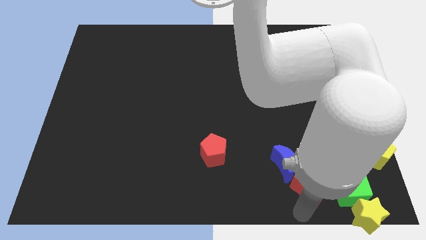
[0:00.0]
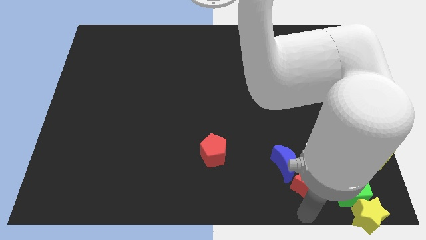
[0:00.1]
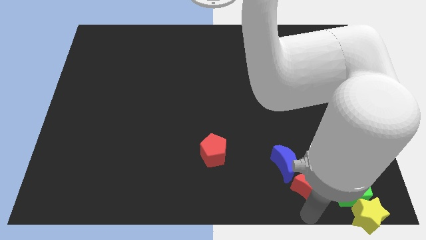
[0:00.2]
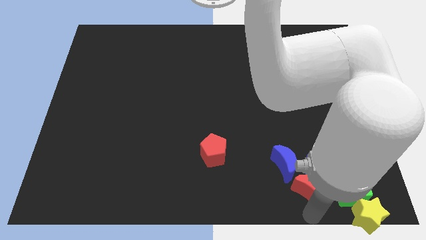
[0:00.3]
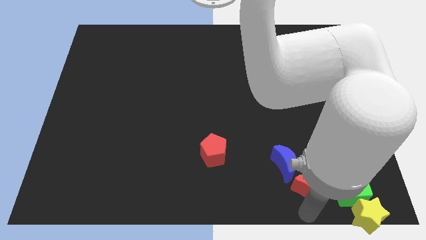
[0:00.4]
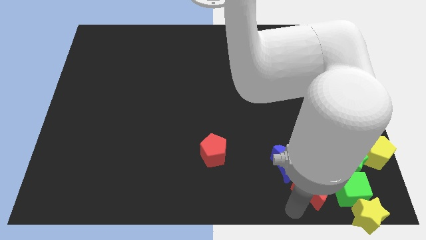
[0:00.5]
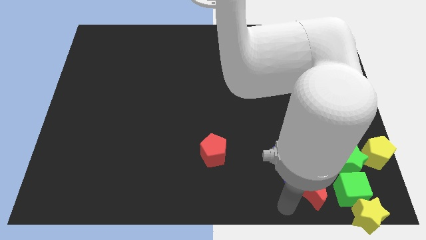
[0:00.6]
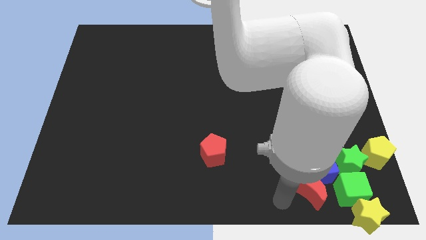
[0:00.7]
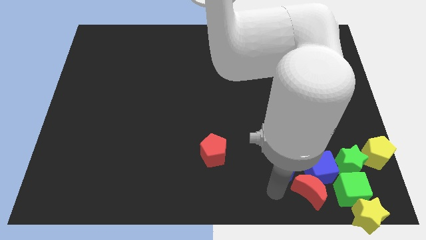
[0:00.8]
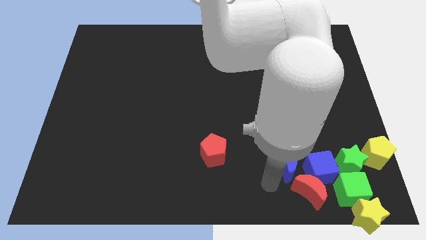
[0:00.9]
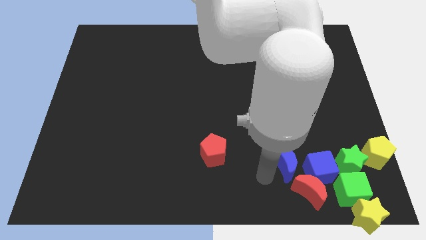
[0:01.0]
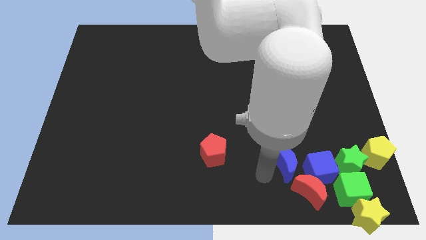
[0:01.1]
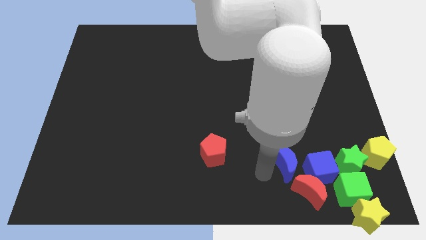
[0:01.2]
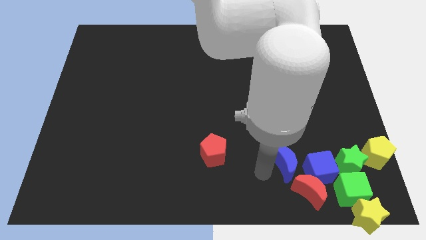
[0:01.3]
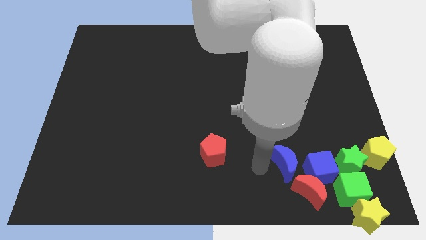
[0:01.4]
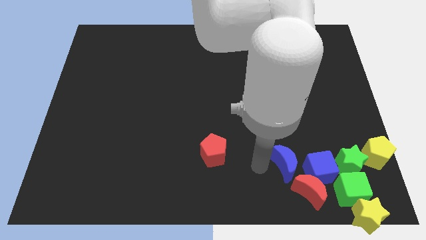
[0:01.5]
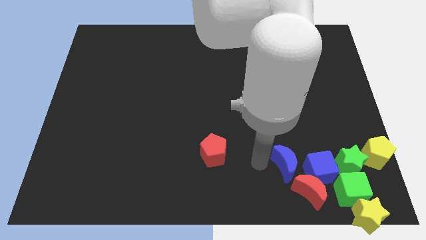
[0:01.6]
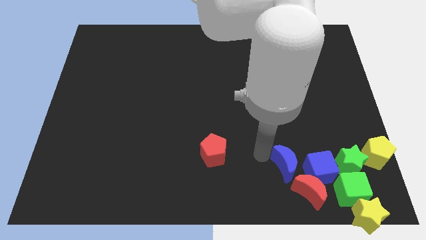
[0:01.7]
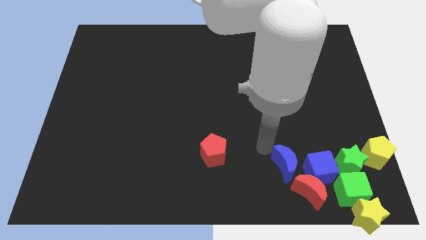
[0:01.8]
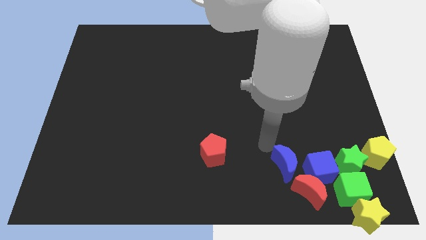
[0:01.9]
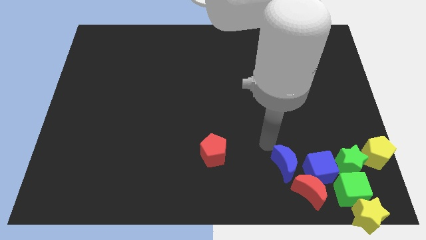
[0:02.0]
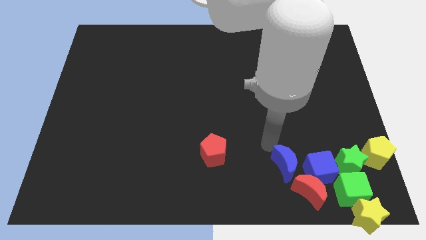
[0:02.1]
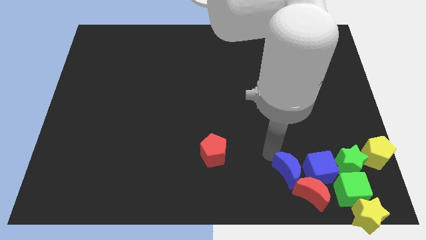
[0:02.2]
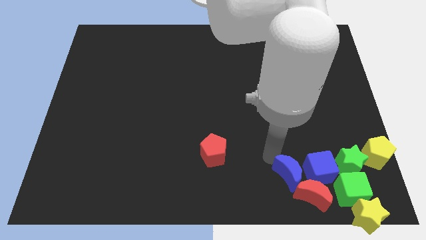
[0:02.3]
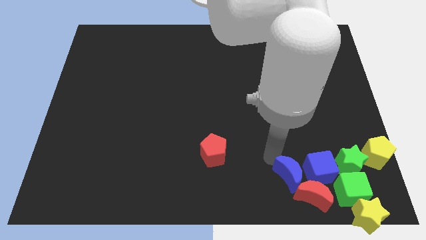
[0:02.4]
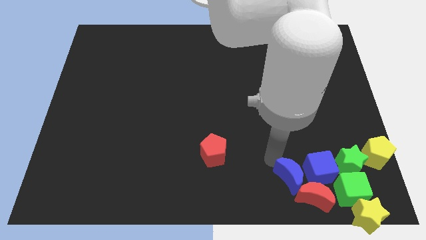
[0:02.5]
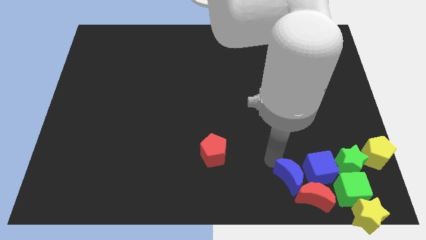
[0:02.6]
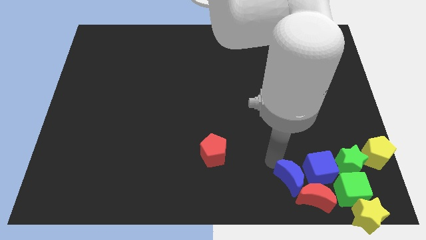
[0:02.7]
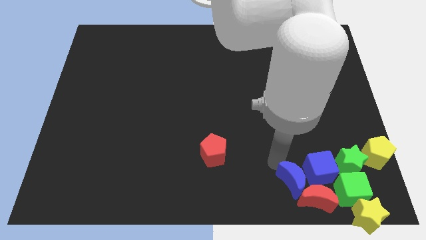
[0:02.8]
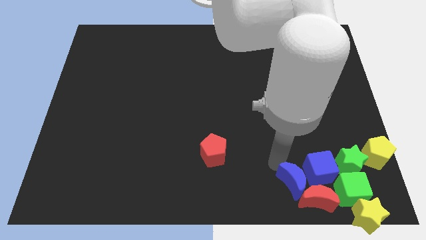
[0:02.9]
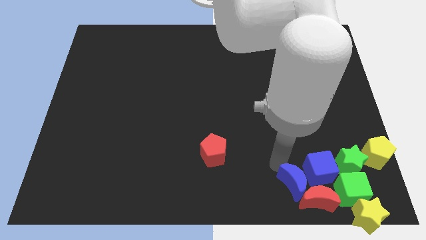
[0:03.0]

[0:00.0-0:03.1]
place the blue moon left to the blue cube

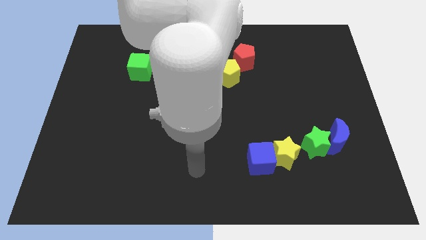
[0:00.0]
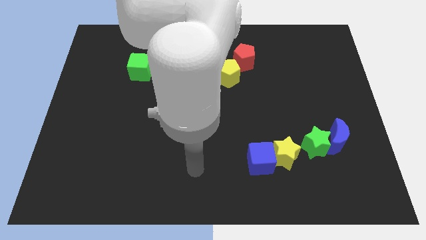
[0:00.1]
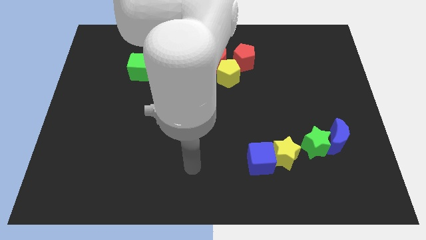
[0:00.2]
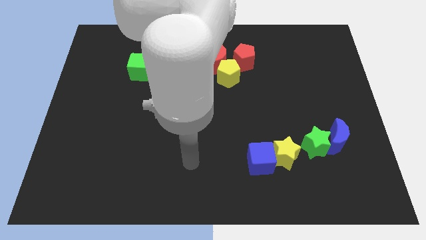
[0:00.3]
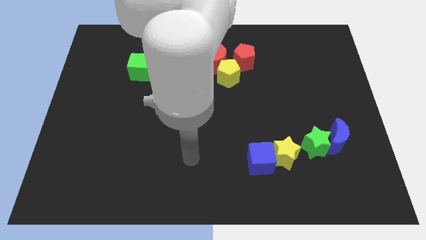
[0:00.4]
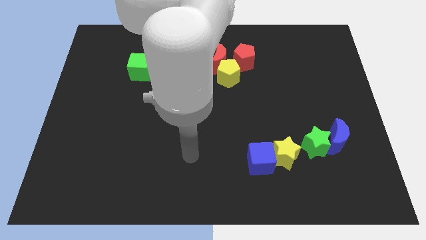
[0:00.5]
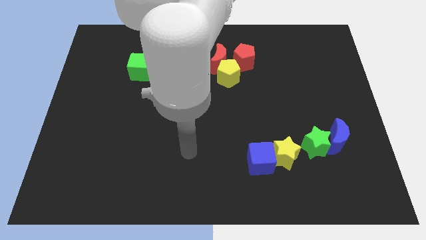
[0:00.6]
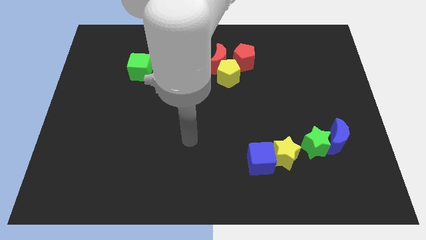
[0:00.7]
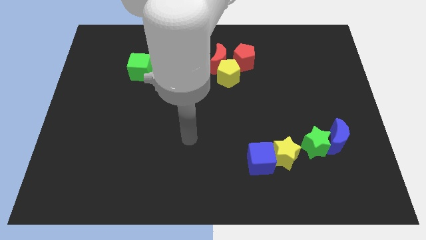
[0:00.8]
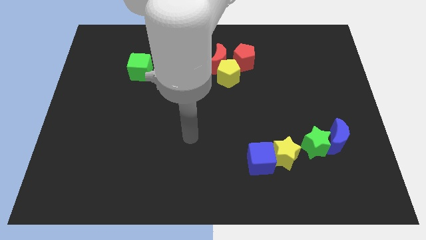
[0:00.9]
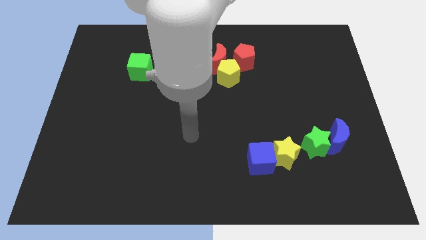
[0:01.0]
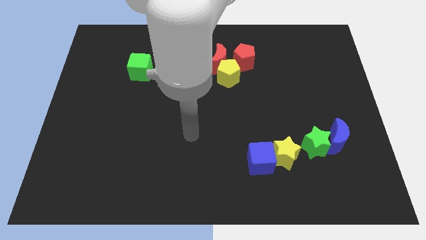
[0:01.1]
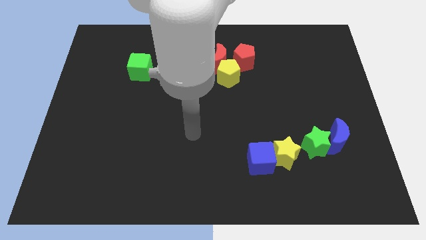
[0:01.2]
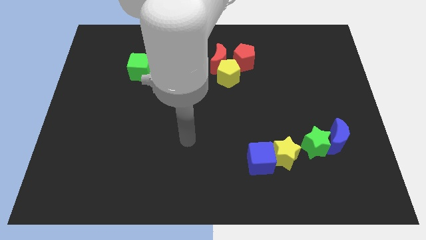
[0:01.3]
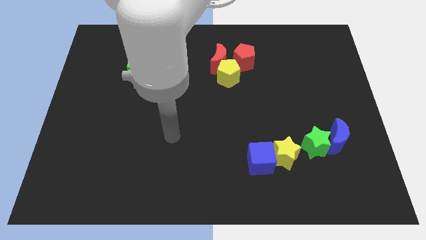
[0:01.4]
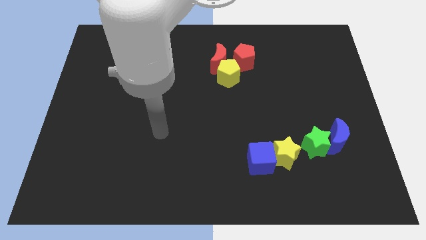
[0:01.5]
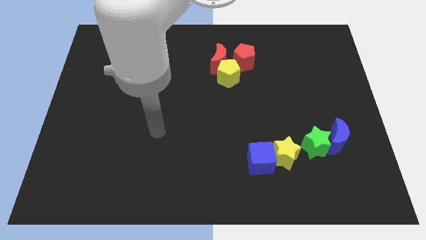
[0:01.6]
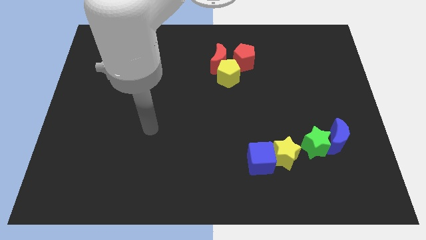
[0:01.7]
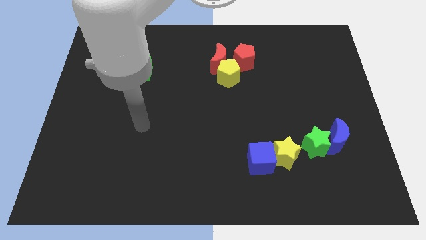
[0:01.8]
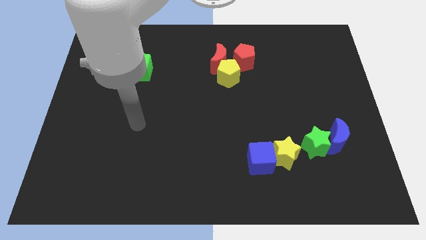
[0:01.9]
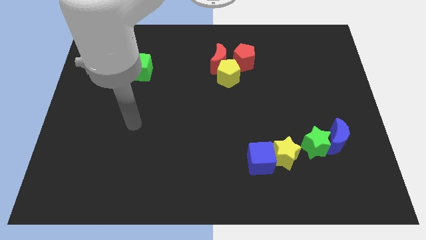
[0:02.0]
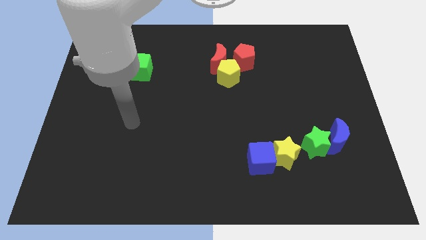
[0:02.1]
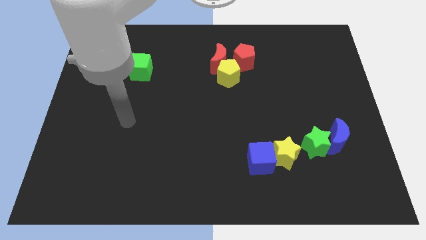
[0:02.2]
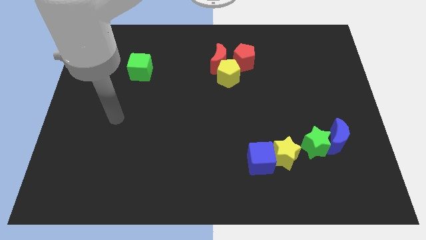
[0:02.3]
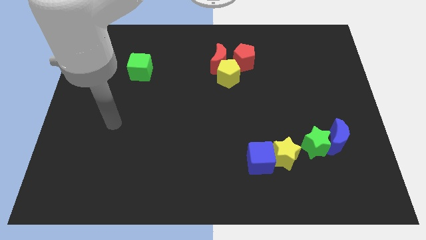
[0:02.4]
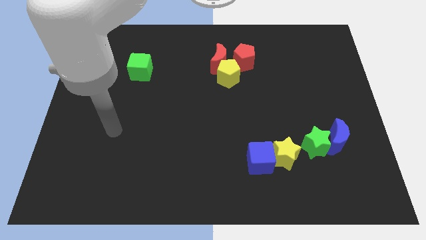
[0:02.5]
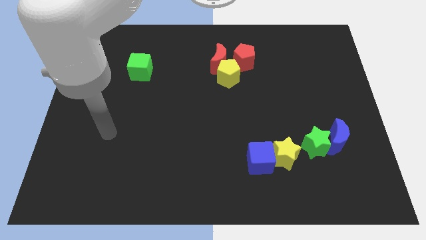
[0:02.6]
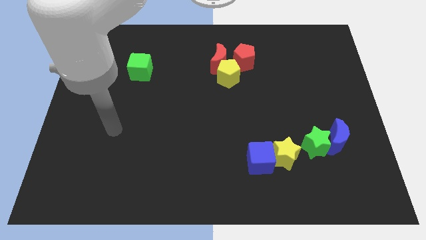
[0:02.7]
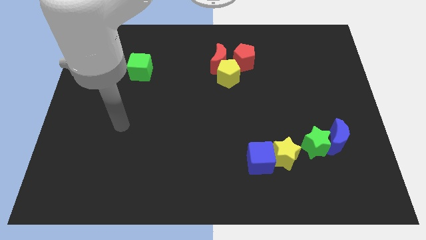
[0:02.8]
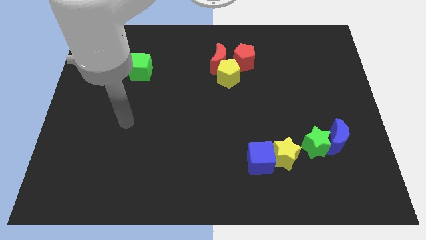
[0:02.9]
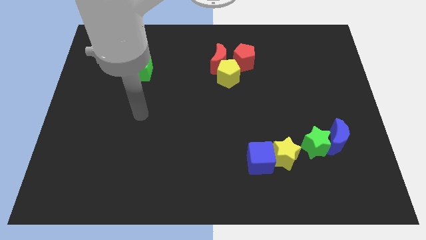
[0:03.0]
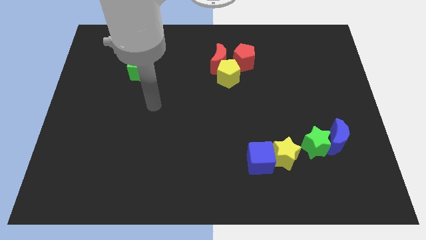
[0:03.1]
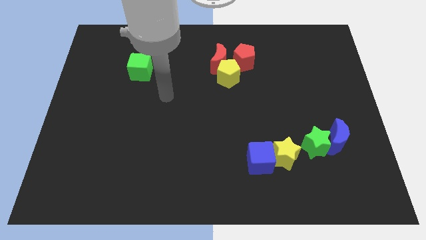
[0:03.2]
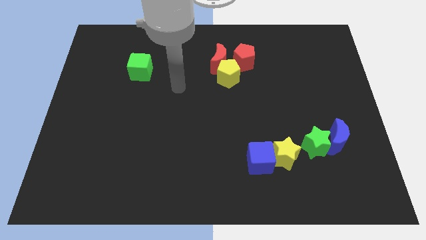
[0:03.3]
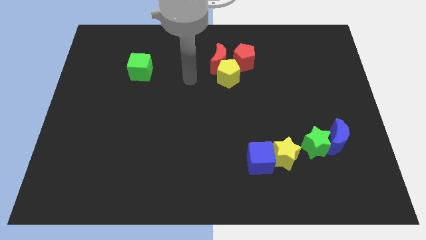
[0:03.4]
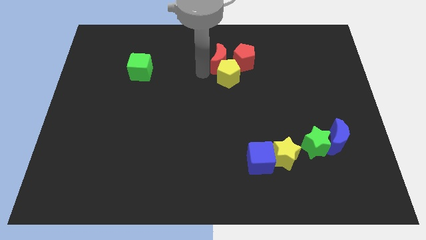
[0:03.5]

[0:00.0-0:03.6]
point the arm to the left of yellow pentagon

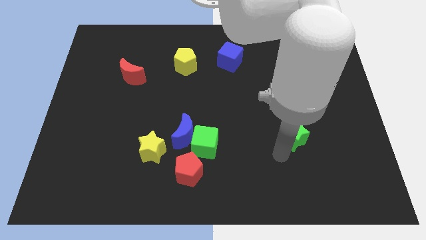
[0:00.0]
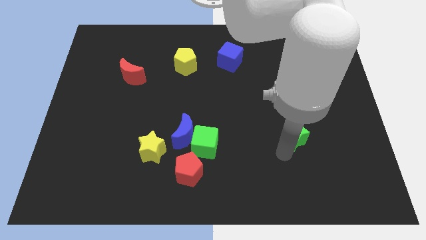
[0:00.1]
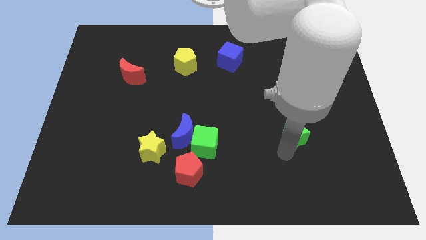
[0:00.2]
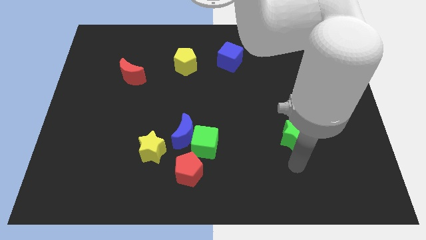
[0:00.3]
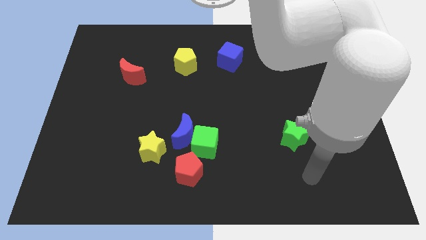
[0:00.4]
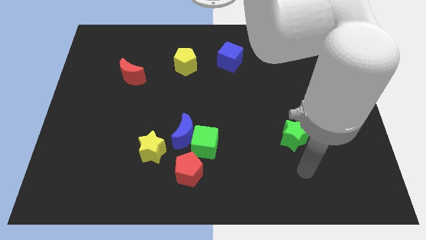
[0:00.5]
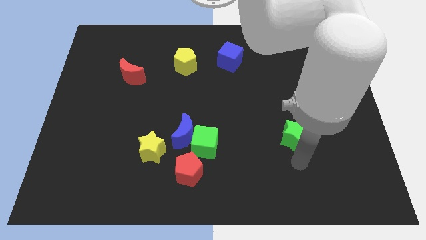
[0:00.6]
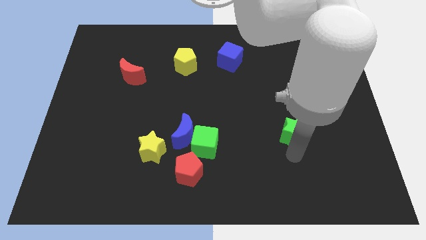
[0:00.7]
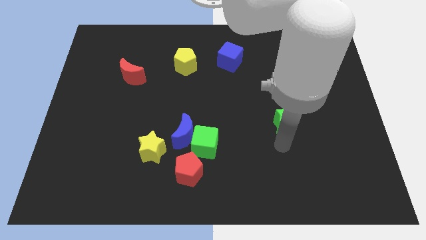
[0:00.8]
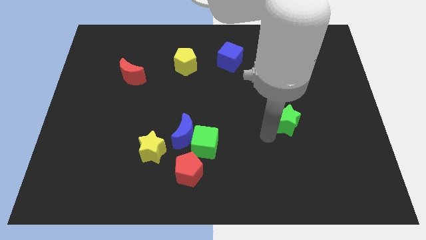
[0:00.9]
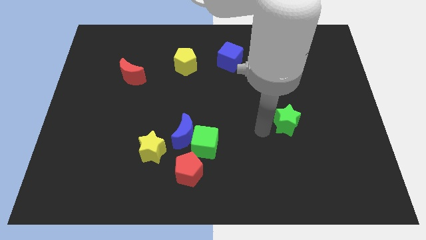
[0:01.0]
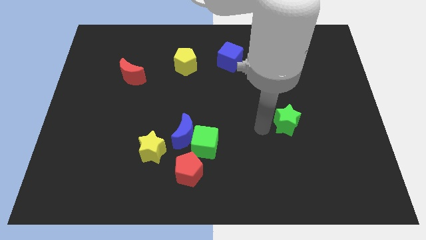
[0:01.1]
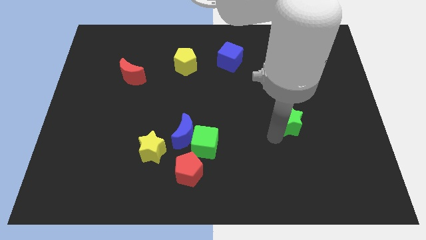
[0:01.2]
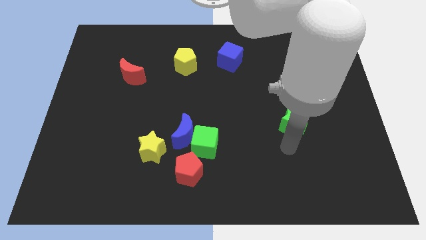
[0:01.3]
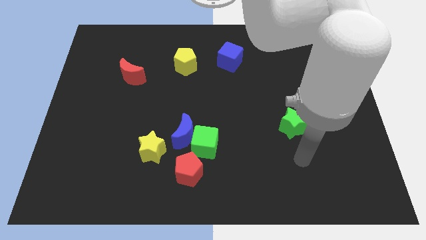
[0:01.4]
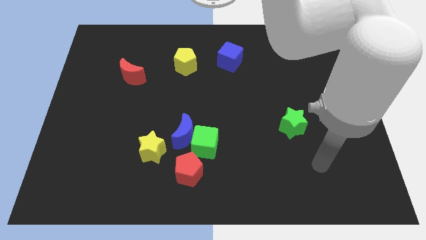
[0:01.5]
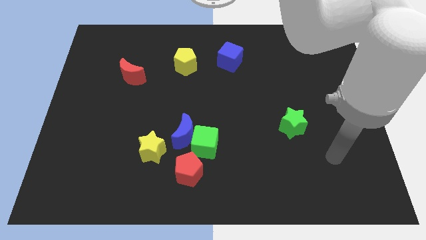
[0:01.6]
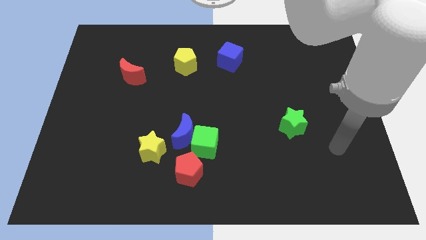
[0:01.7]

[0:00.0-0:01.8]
move the green star slightly to the top side of the board

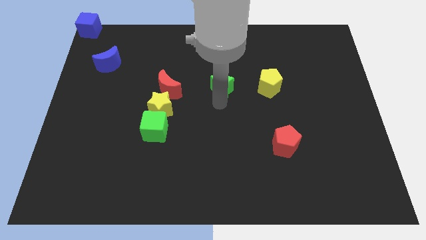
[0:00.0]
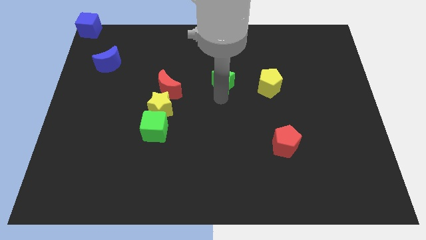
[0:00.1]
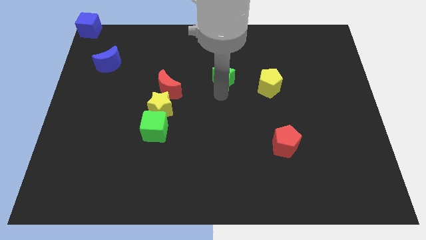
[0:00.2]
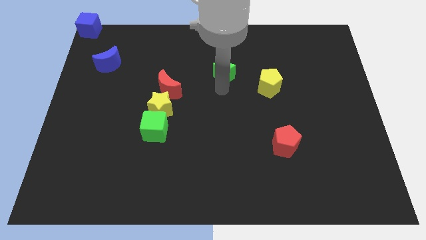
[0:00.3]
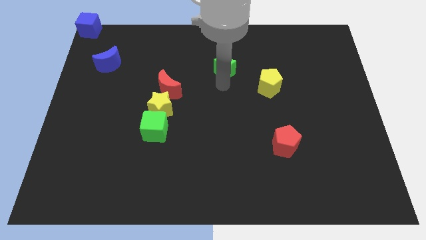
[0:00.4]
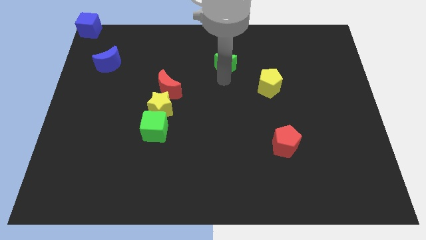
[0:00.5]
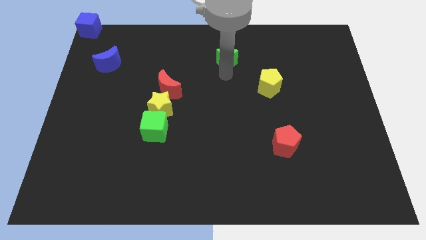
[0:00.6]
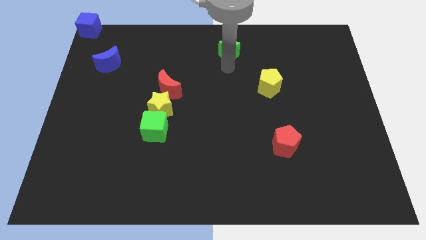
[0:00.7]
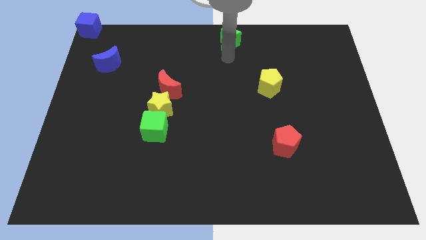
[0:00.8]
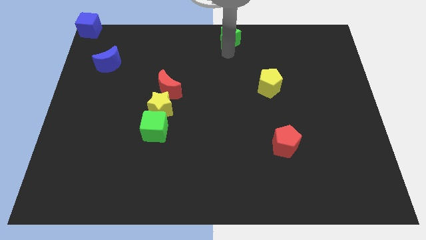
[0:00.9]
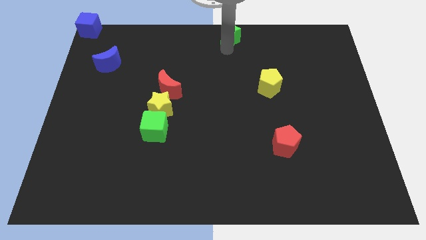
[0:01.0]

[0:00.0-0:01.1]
move the green star to the top center of the board
